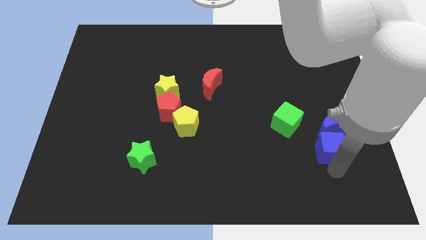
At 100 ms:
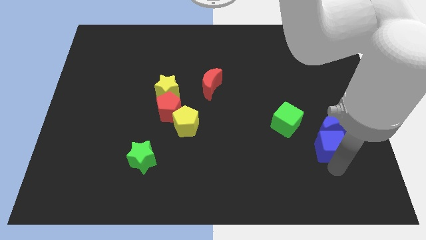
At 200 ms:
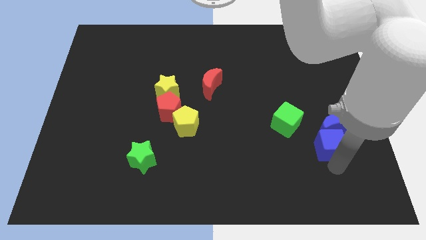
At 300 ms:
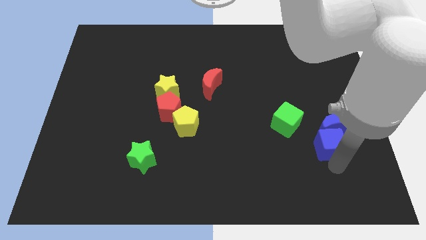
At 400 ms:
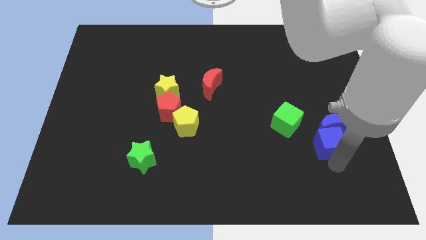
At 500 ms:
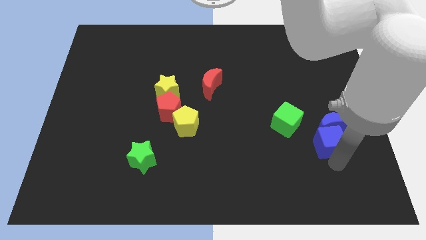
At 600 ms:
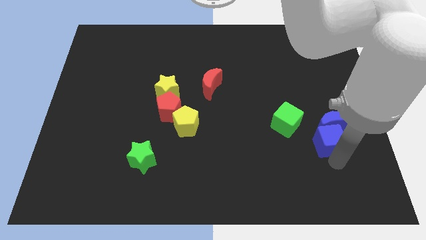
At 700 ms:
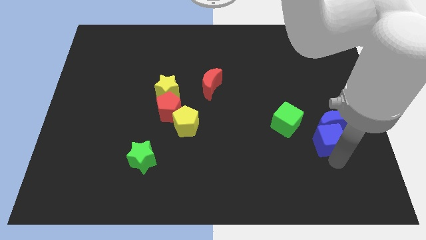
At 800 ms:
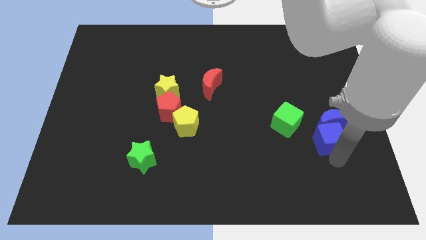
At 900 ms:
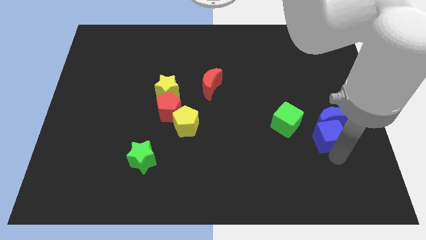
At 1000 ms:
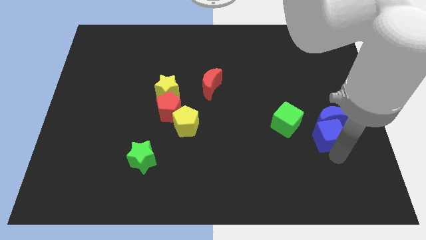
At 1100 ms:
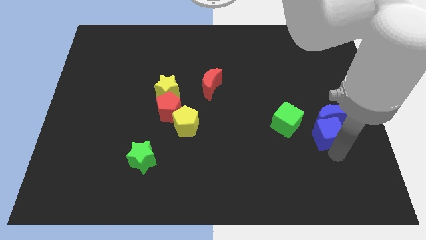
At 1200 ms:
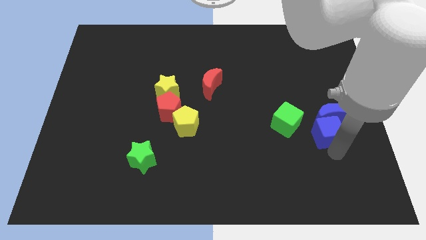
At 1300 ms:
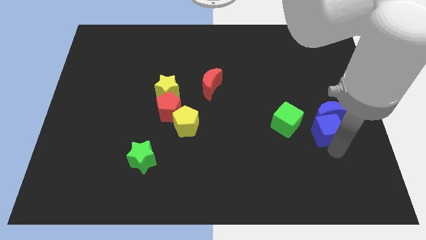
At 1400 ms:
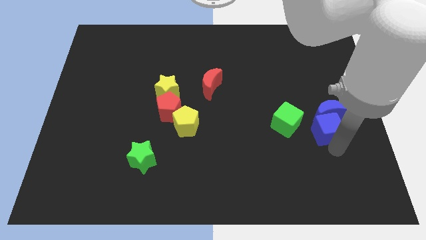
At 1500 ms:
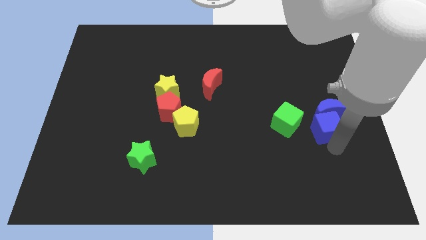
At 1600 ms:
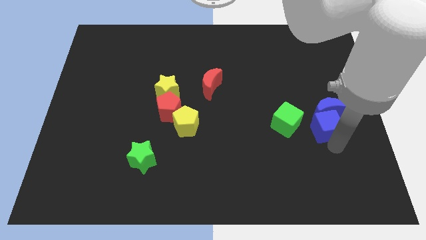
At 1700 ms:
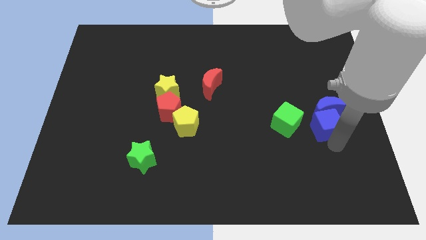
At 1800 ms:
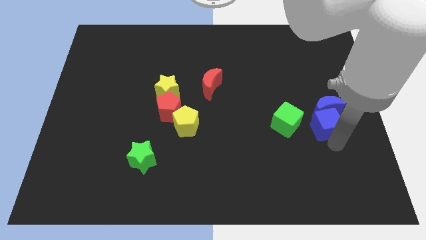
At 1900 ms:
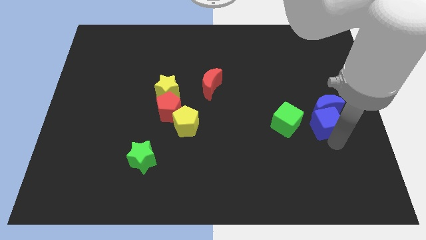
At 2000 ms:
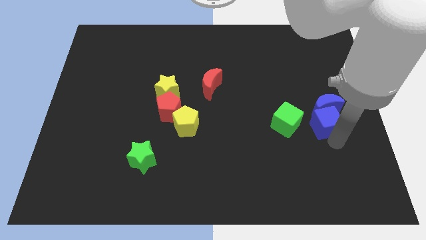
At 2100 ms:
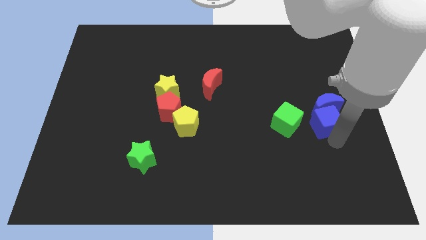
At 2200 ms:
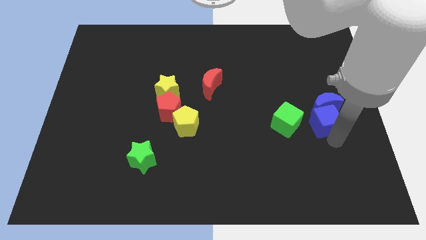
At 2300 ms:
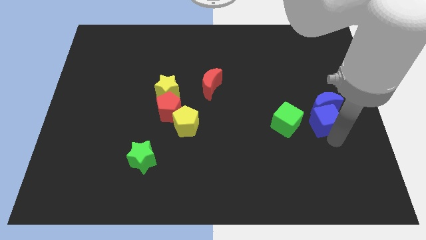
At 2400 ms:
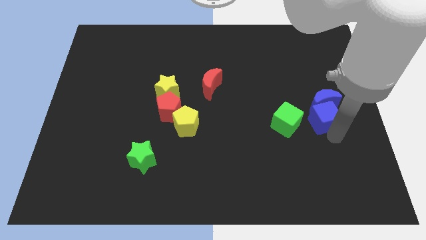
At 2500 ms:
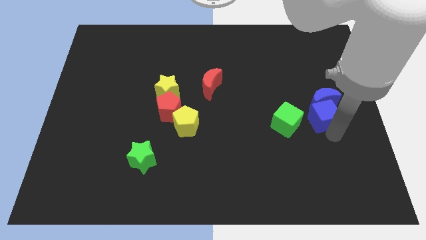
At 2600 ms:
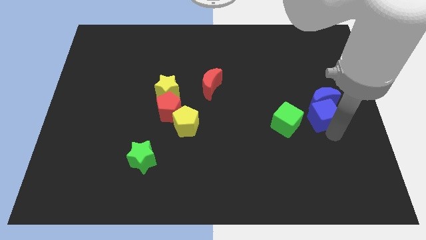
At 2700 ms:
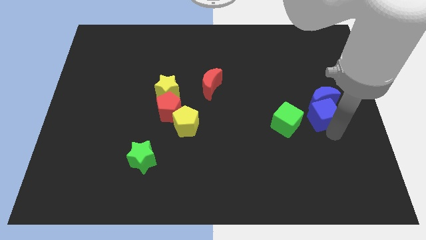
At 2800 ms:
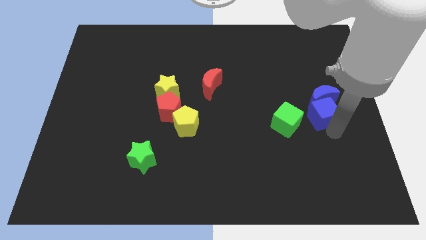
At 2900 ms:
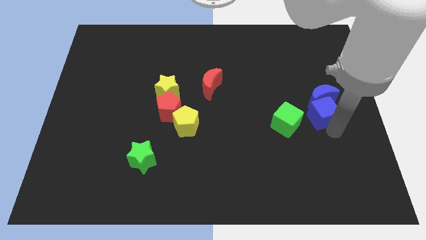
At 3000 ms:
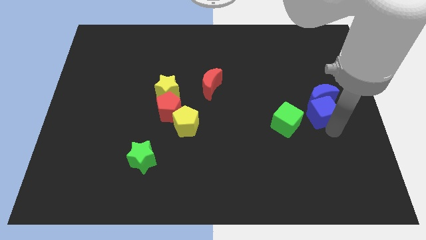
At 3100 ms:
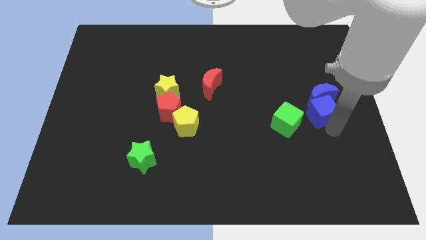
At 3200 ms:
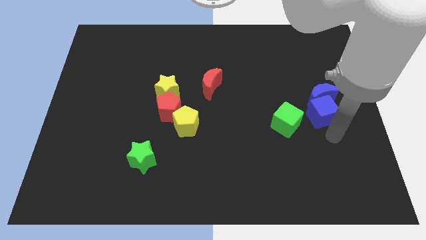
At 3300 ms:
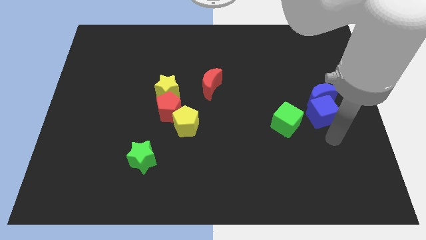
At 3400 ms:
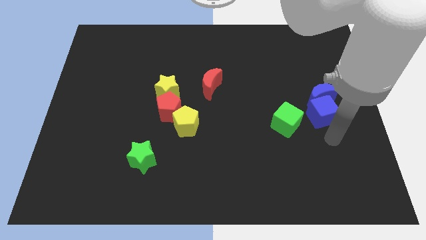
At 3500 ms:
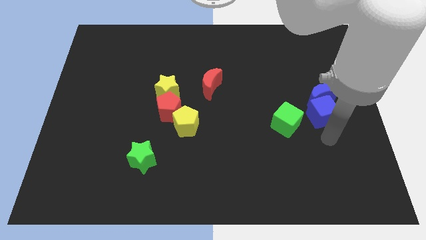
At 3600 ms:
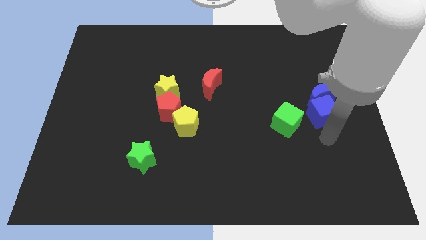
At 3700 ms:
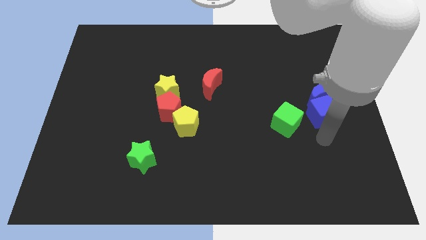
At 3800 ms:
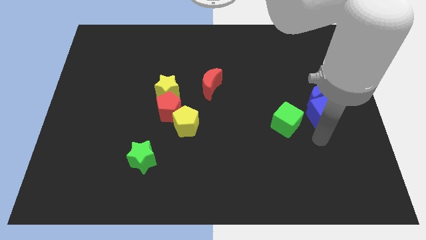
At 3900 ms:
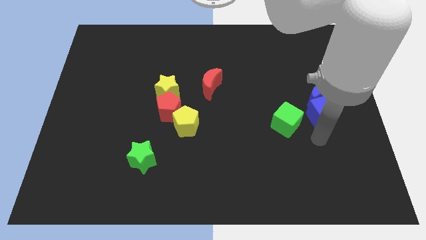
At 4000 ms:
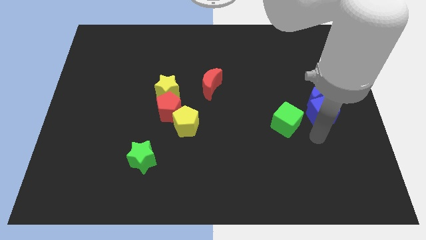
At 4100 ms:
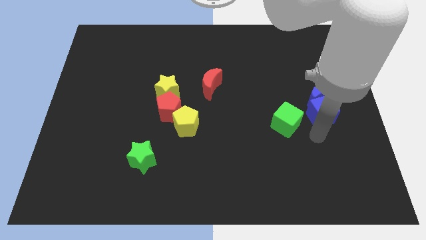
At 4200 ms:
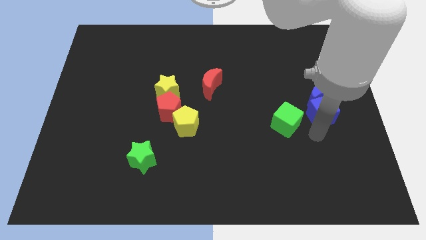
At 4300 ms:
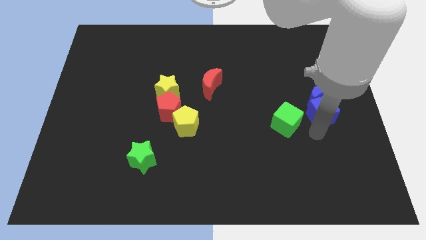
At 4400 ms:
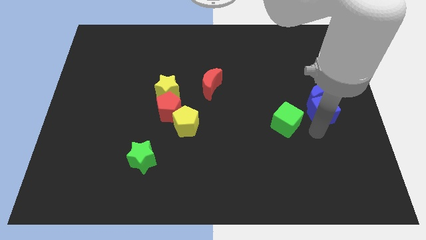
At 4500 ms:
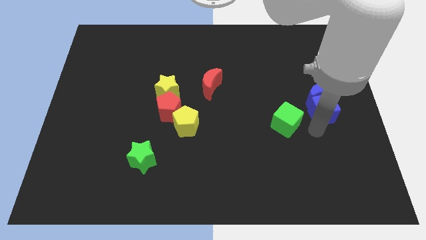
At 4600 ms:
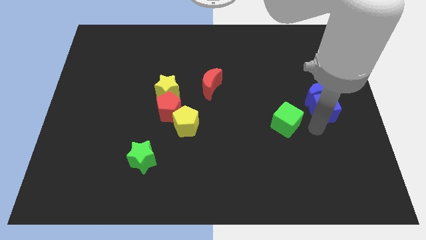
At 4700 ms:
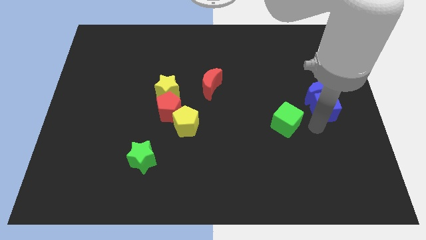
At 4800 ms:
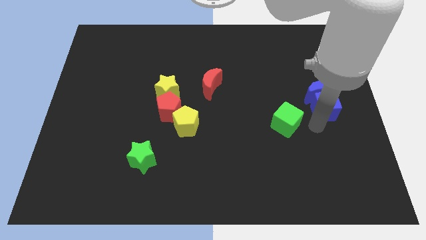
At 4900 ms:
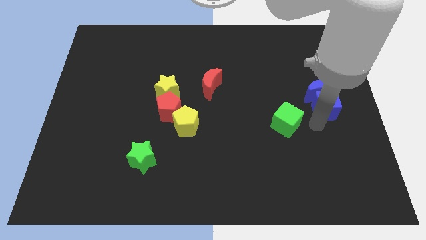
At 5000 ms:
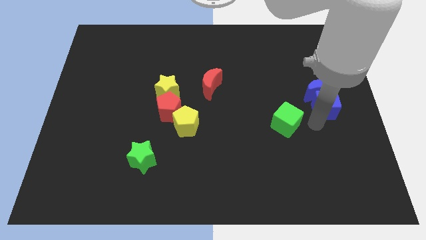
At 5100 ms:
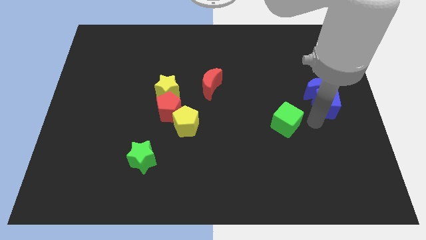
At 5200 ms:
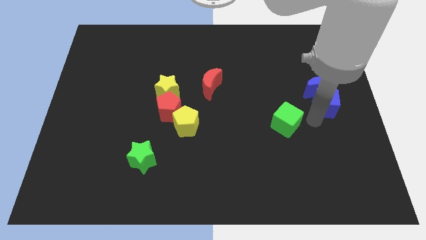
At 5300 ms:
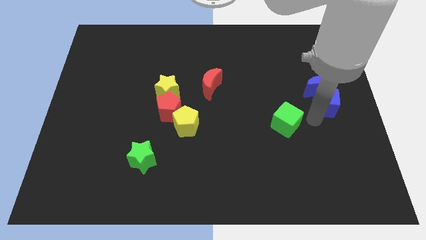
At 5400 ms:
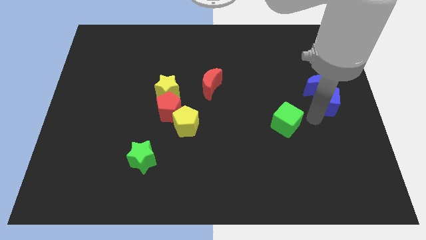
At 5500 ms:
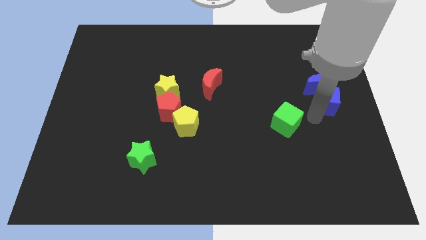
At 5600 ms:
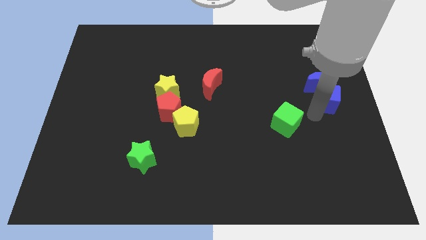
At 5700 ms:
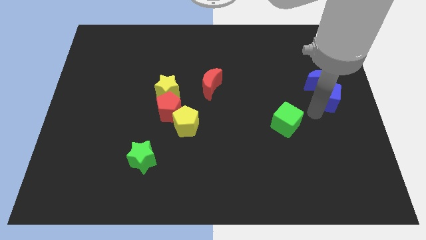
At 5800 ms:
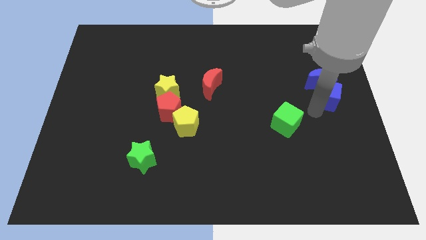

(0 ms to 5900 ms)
move the blue blocks to the right center of the board

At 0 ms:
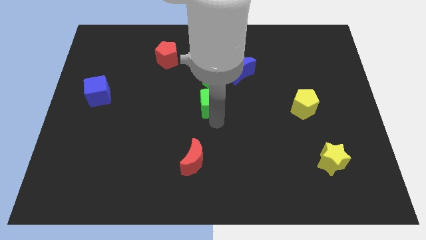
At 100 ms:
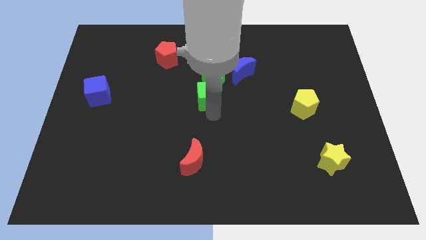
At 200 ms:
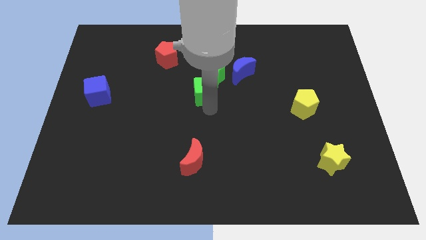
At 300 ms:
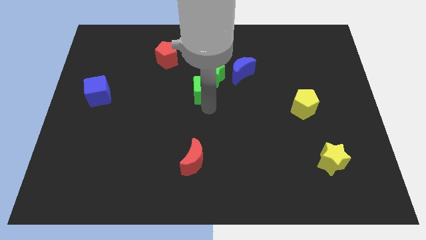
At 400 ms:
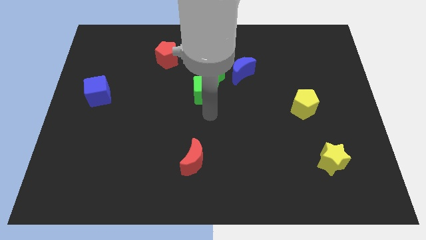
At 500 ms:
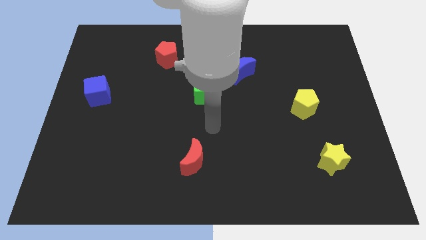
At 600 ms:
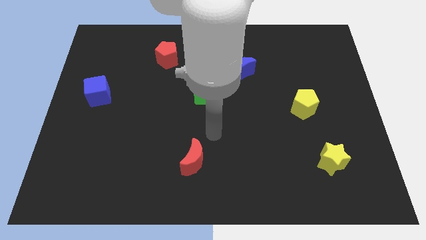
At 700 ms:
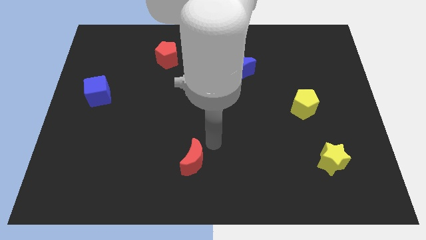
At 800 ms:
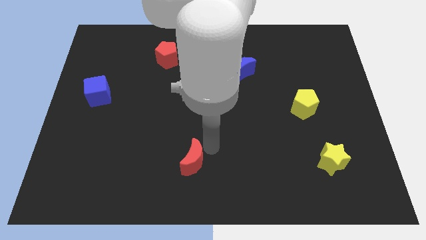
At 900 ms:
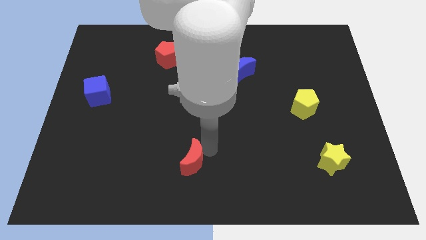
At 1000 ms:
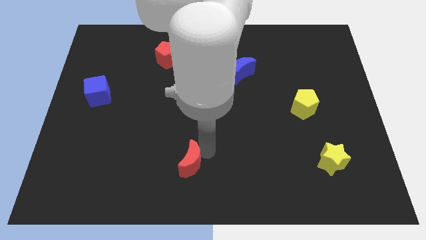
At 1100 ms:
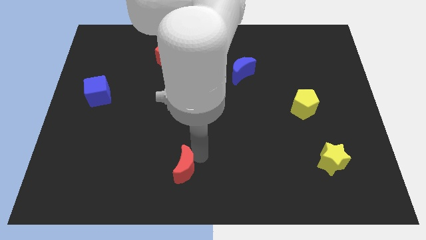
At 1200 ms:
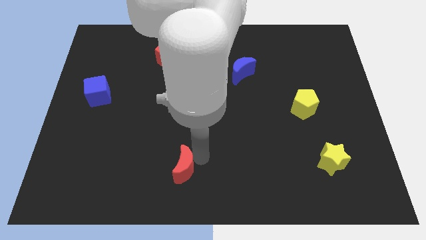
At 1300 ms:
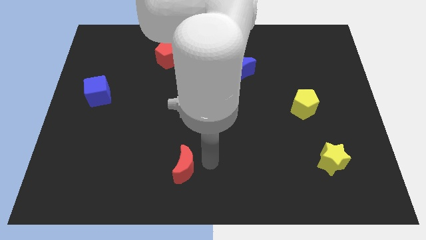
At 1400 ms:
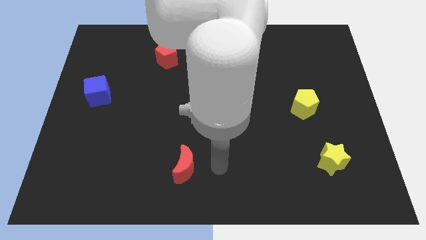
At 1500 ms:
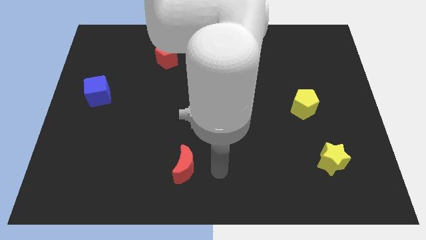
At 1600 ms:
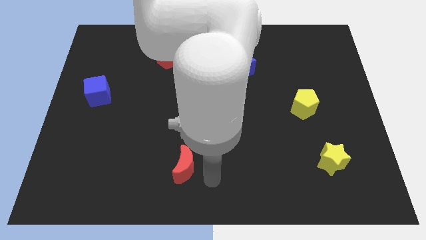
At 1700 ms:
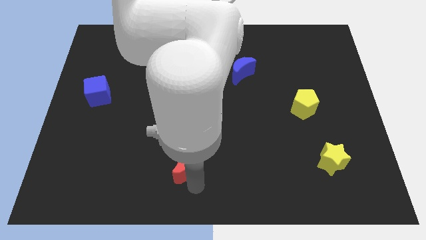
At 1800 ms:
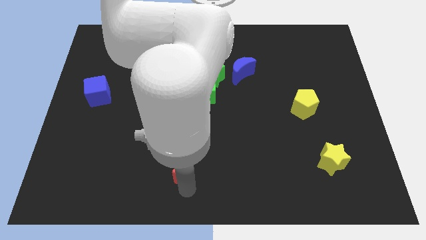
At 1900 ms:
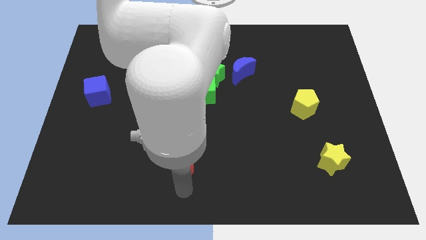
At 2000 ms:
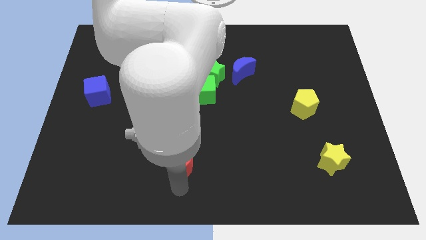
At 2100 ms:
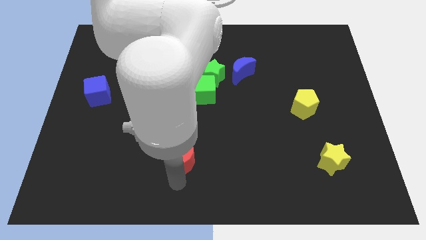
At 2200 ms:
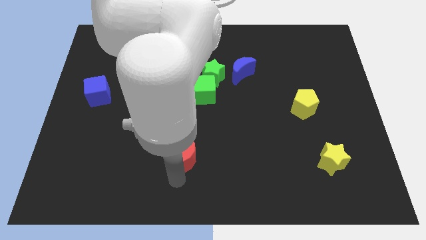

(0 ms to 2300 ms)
touch the bottom of the red crescent

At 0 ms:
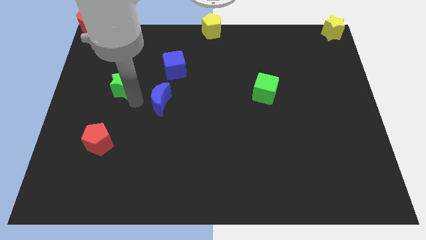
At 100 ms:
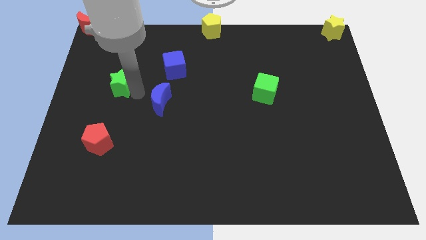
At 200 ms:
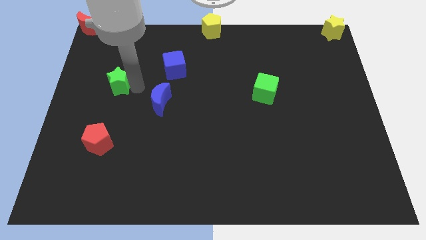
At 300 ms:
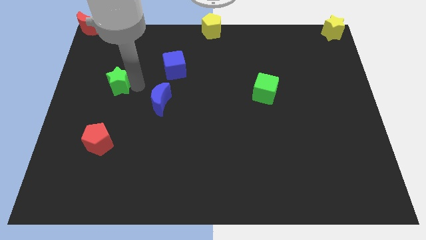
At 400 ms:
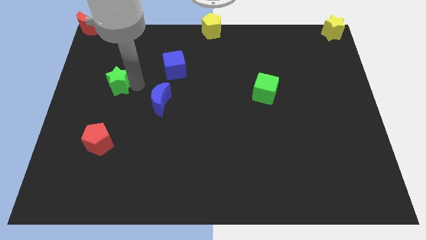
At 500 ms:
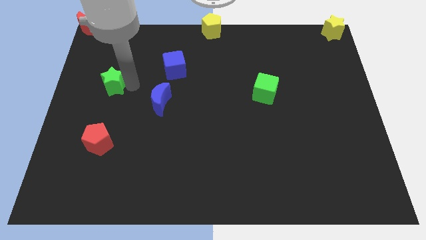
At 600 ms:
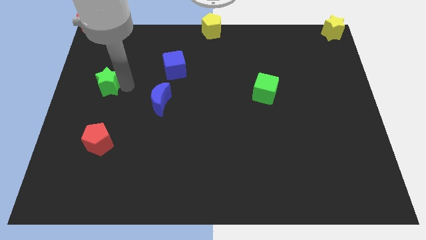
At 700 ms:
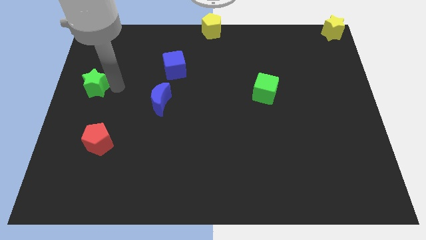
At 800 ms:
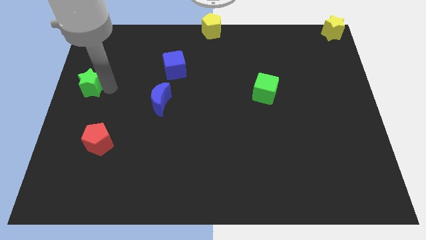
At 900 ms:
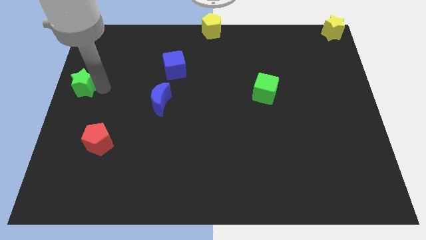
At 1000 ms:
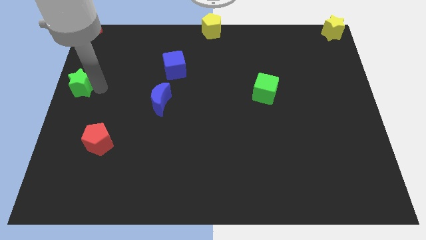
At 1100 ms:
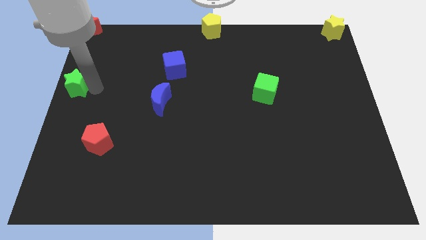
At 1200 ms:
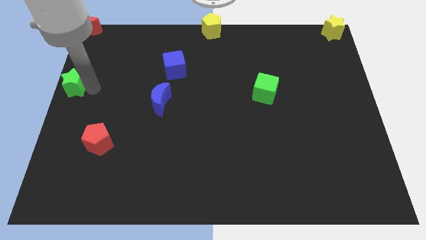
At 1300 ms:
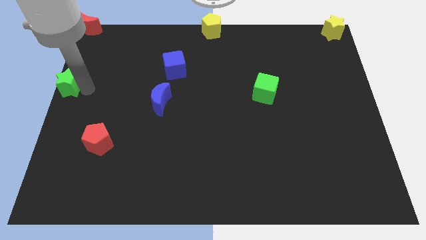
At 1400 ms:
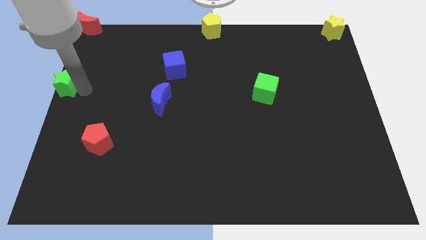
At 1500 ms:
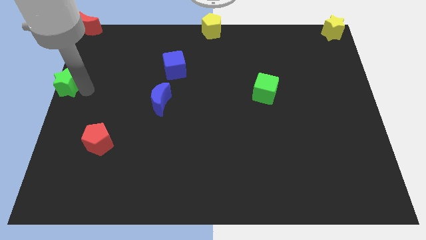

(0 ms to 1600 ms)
move the green star at the bottom side of the red crescent
